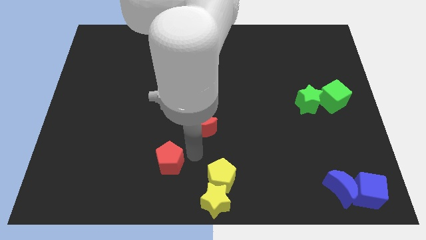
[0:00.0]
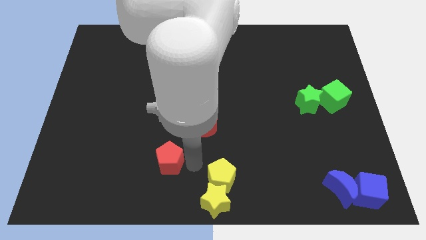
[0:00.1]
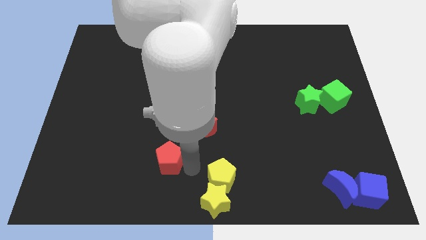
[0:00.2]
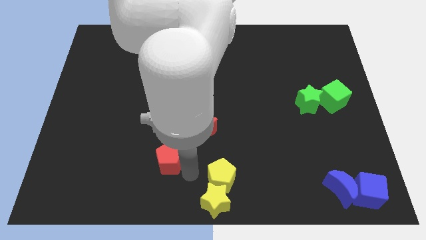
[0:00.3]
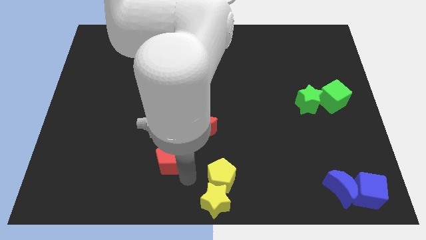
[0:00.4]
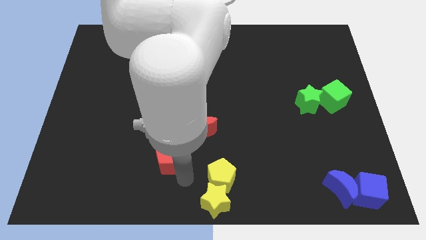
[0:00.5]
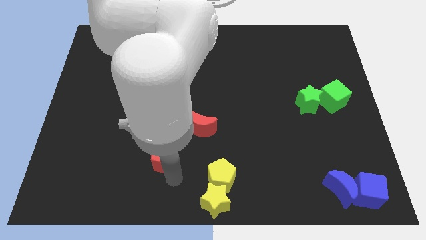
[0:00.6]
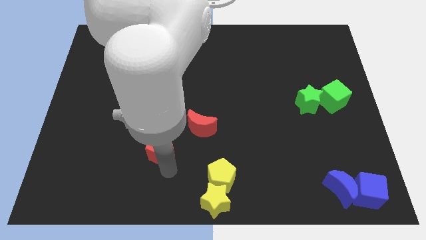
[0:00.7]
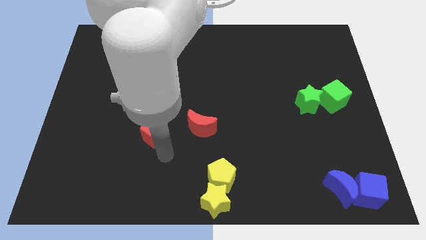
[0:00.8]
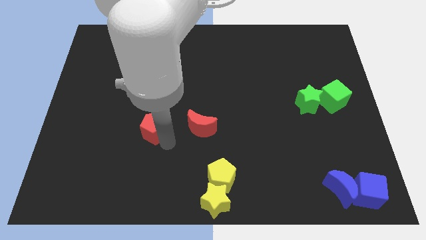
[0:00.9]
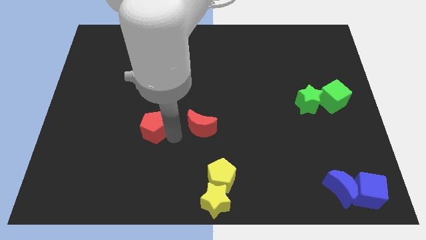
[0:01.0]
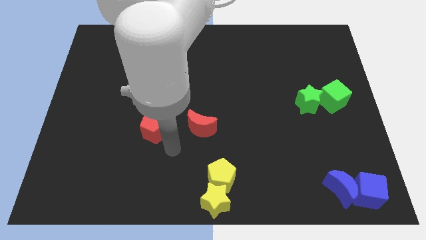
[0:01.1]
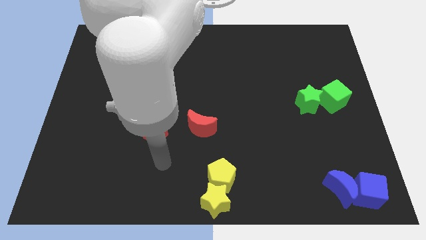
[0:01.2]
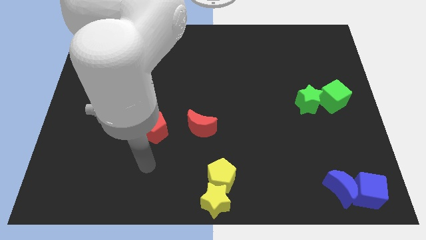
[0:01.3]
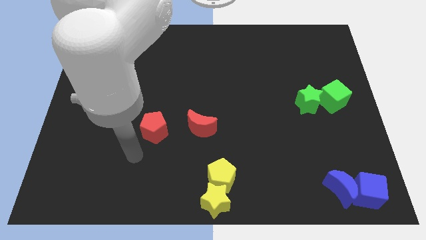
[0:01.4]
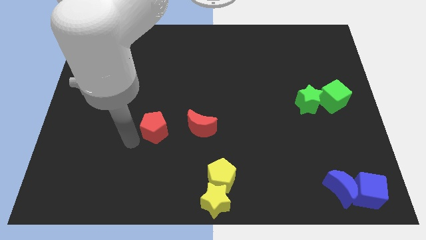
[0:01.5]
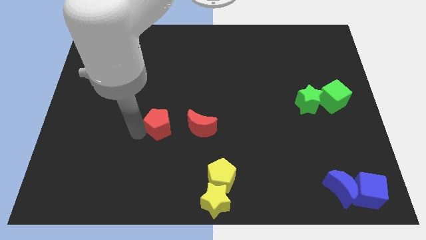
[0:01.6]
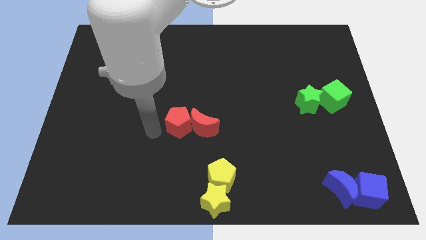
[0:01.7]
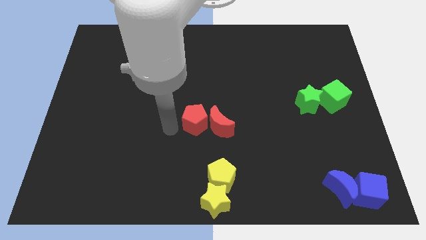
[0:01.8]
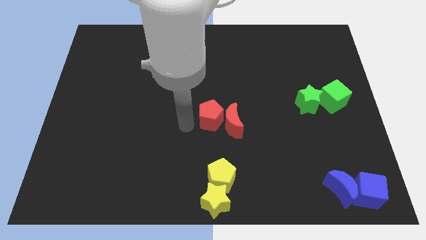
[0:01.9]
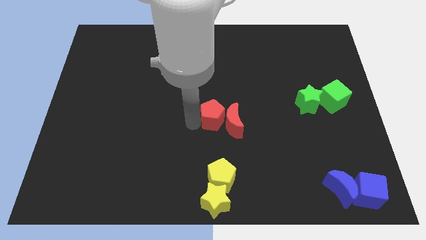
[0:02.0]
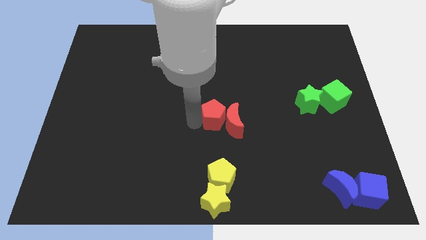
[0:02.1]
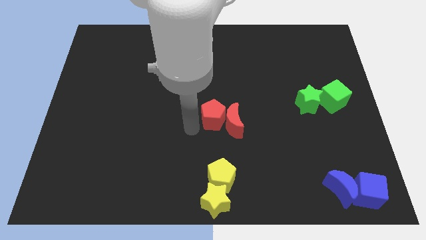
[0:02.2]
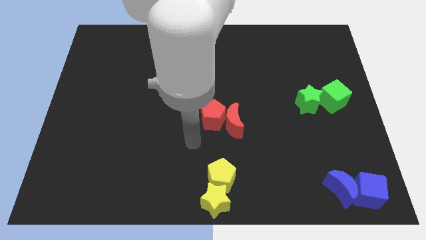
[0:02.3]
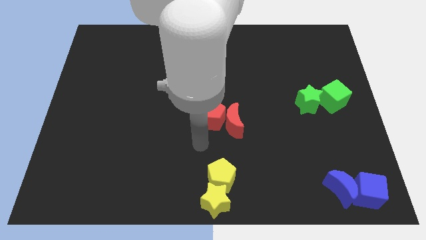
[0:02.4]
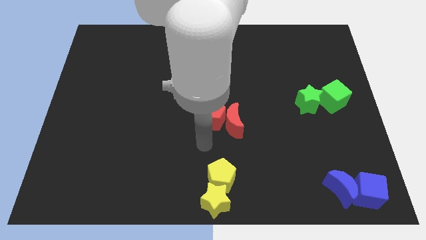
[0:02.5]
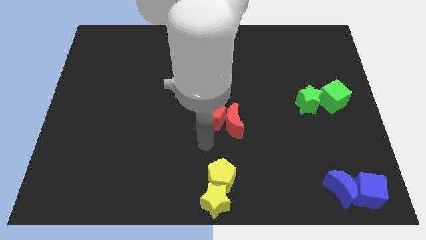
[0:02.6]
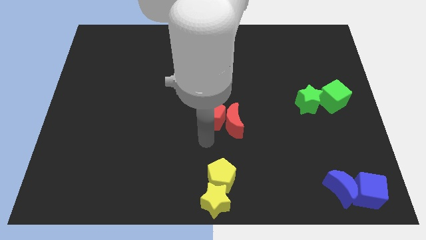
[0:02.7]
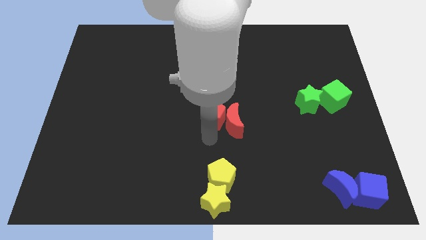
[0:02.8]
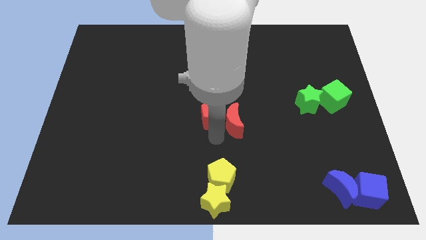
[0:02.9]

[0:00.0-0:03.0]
push the red pentagon into the red moon

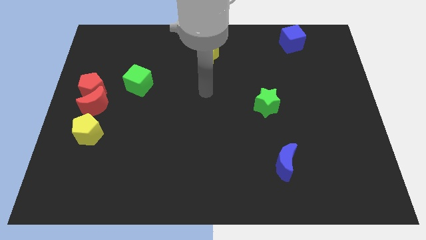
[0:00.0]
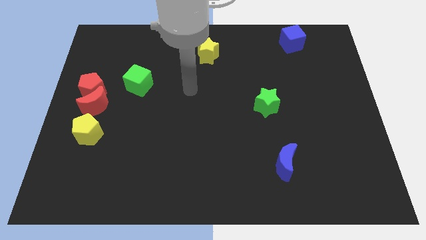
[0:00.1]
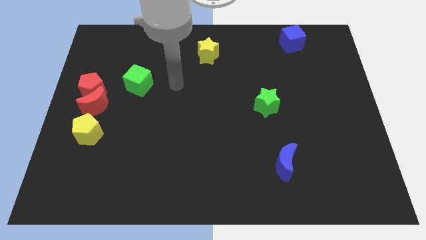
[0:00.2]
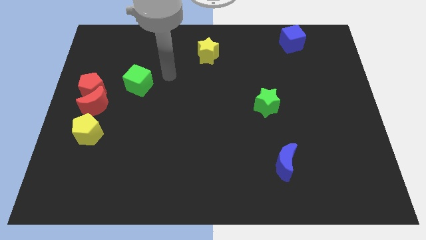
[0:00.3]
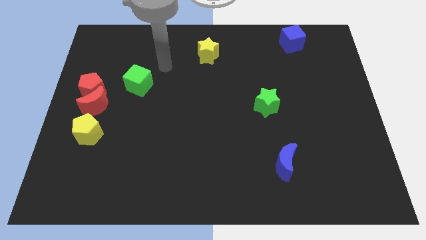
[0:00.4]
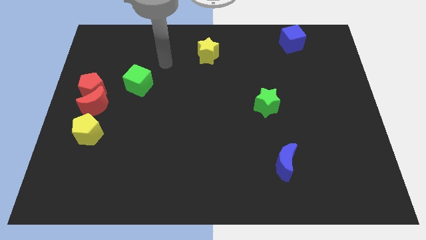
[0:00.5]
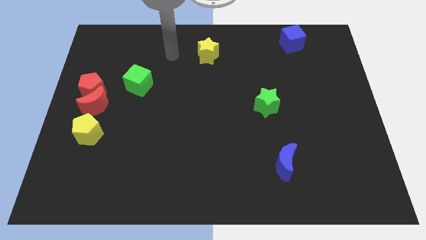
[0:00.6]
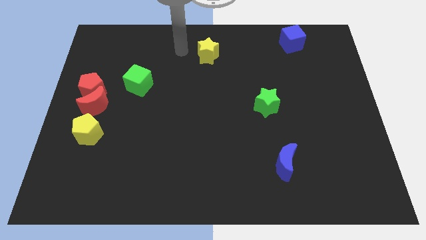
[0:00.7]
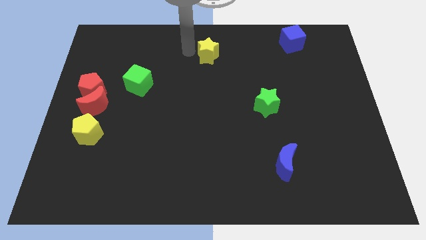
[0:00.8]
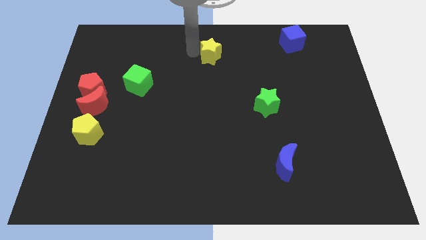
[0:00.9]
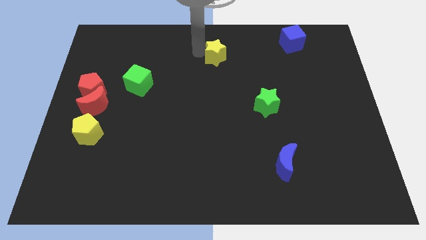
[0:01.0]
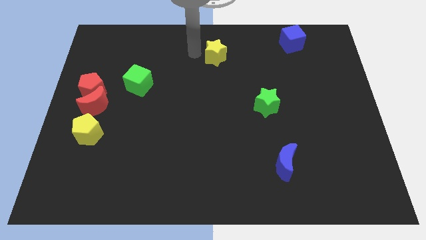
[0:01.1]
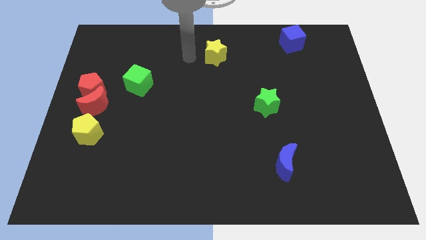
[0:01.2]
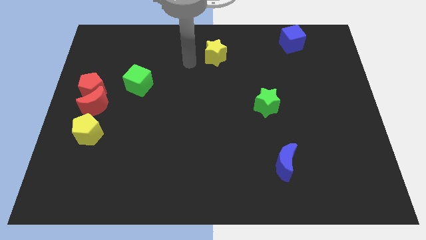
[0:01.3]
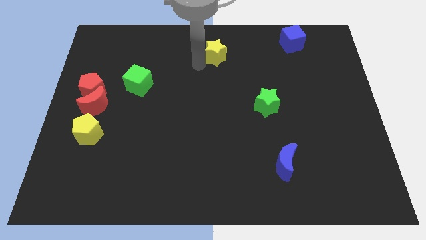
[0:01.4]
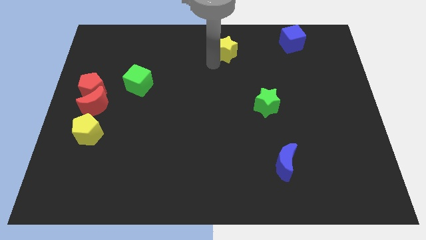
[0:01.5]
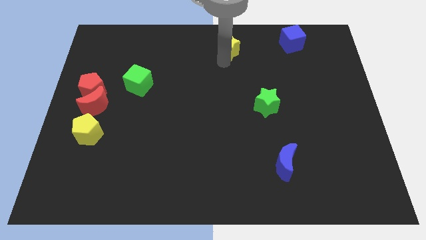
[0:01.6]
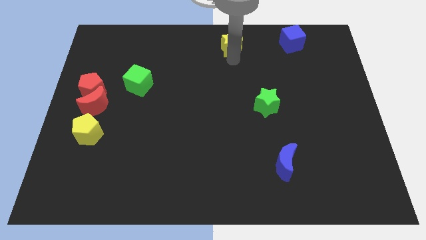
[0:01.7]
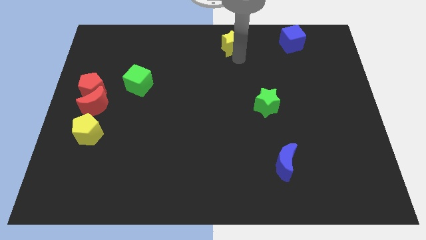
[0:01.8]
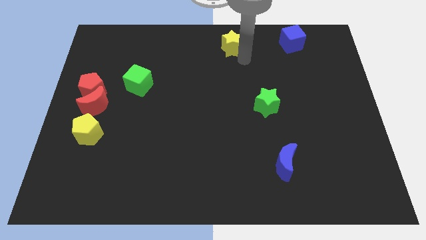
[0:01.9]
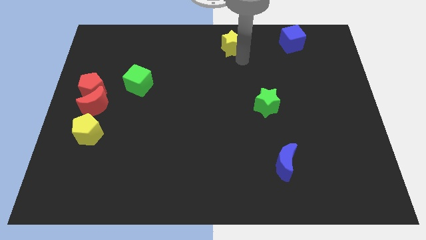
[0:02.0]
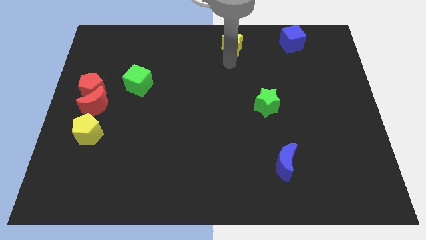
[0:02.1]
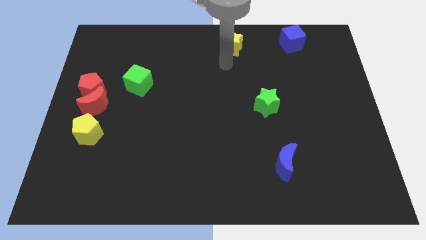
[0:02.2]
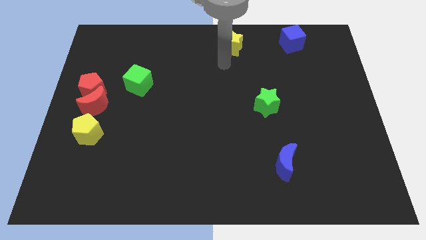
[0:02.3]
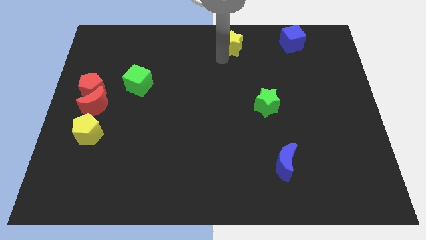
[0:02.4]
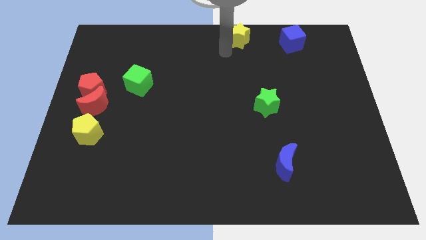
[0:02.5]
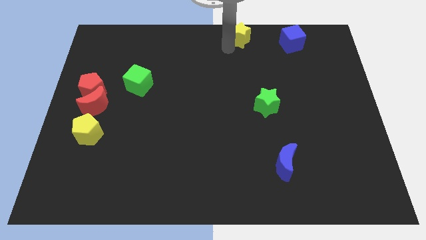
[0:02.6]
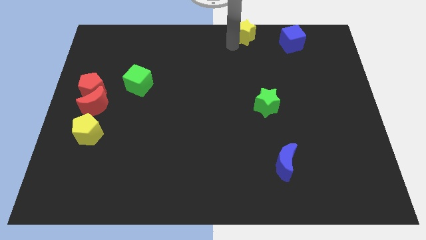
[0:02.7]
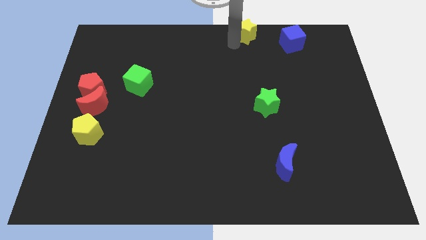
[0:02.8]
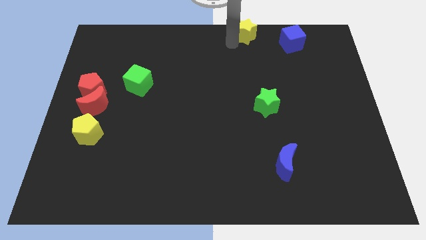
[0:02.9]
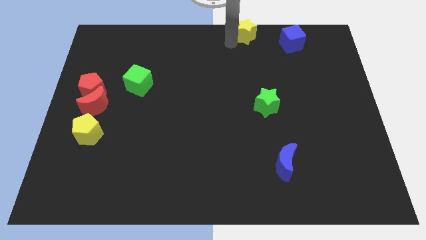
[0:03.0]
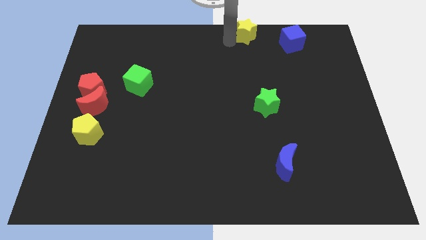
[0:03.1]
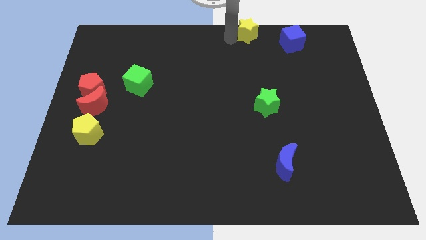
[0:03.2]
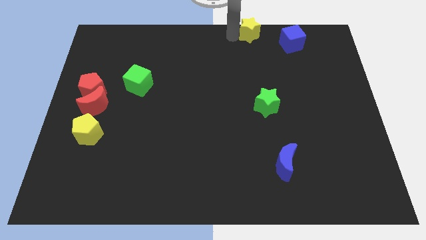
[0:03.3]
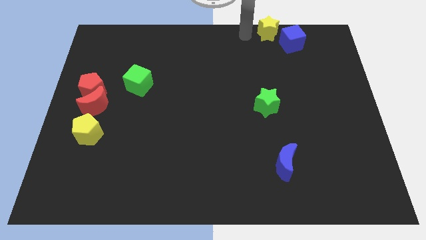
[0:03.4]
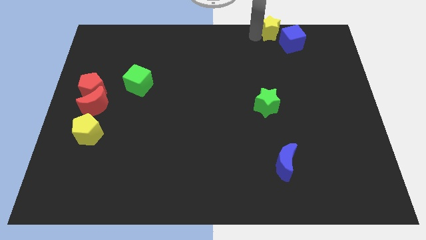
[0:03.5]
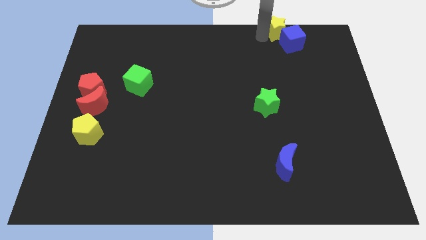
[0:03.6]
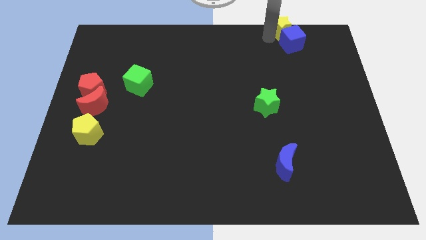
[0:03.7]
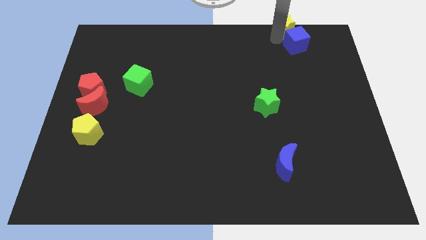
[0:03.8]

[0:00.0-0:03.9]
place the yellow star on top of the blue cube

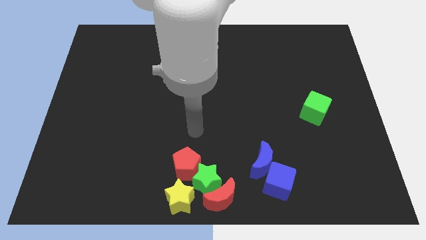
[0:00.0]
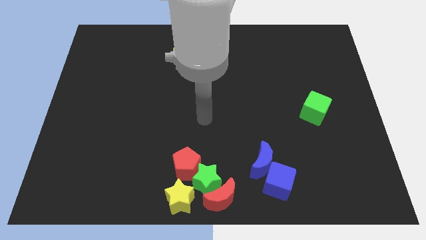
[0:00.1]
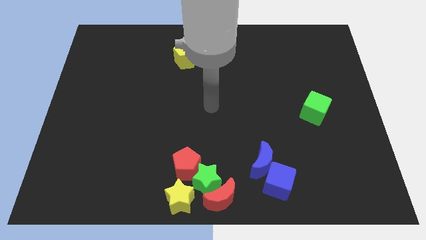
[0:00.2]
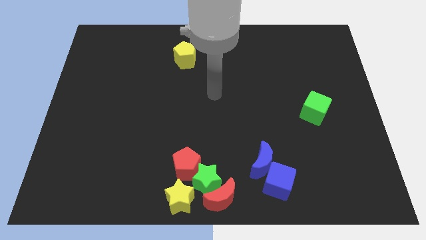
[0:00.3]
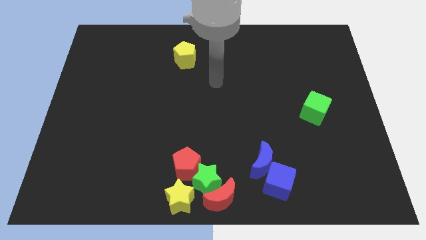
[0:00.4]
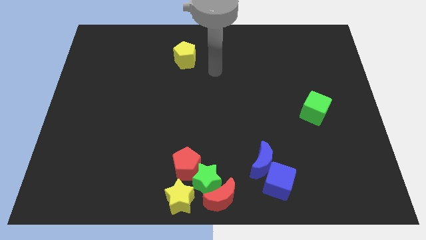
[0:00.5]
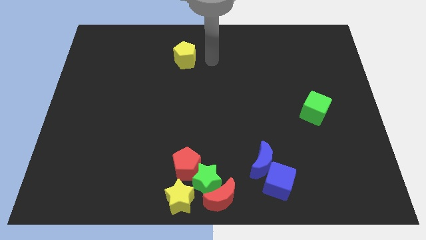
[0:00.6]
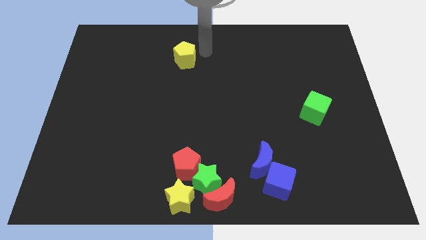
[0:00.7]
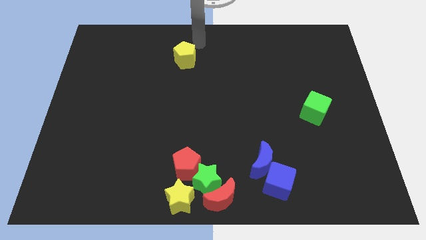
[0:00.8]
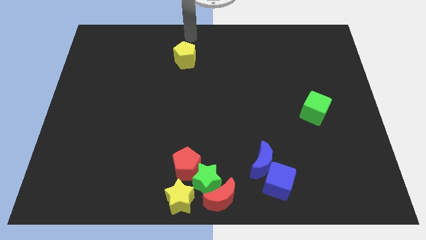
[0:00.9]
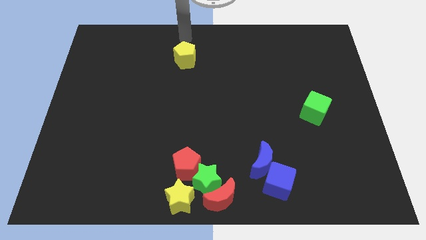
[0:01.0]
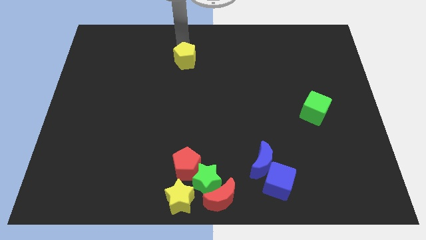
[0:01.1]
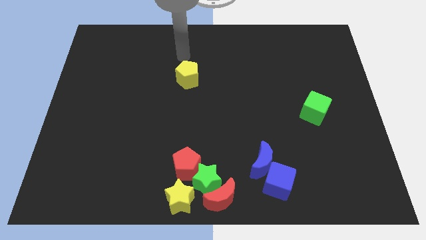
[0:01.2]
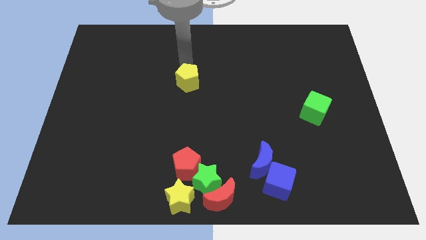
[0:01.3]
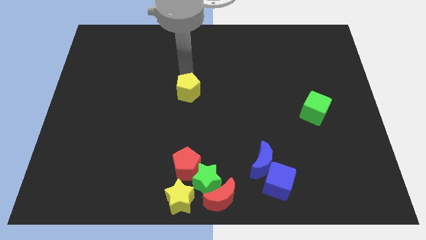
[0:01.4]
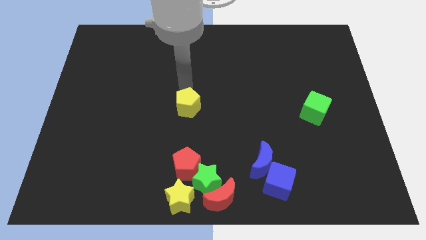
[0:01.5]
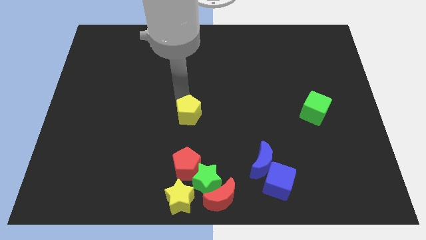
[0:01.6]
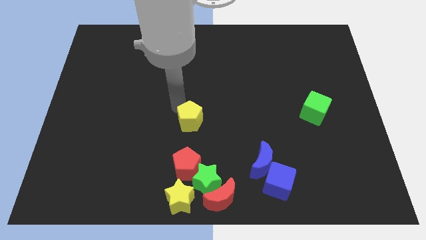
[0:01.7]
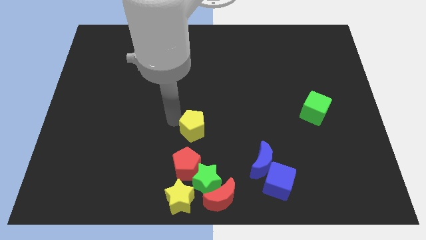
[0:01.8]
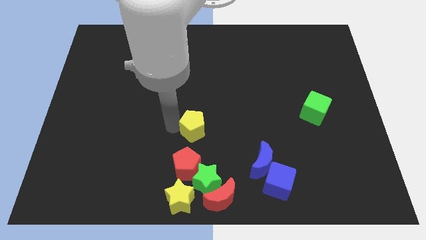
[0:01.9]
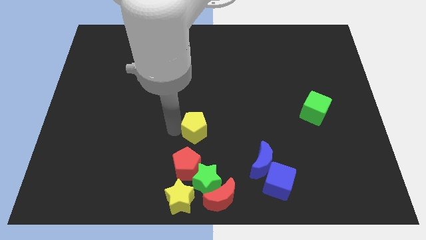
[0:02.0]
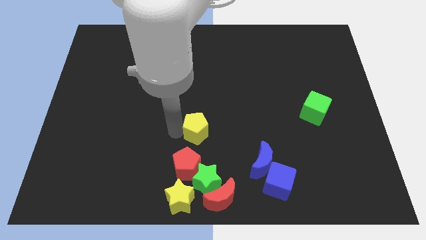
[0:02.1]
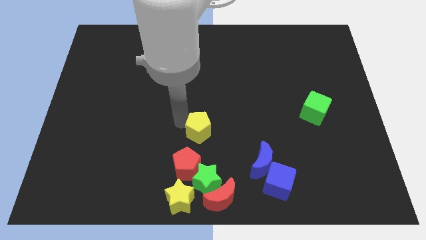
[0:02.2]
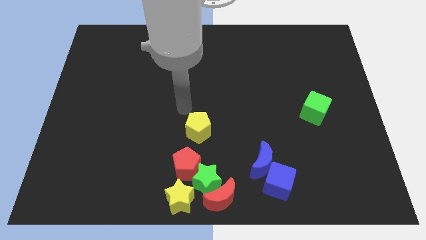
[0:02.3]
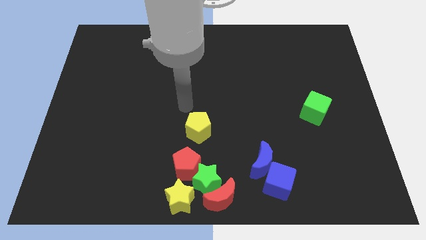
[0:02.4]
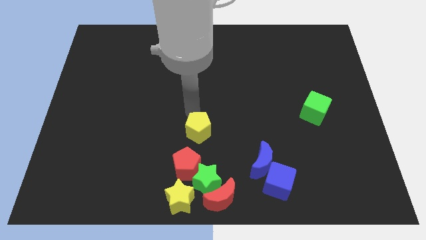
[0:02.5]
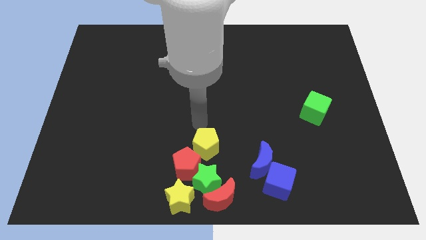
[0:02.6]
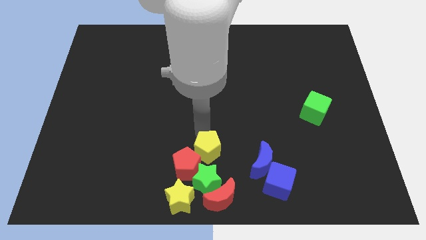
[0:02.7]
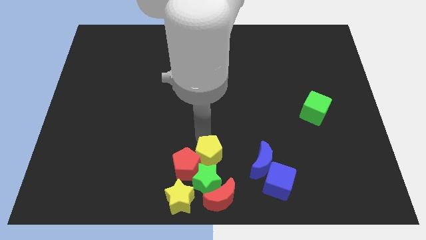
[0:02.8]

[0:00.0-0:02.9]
move the yellow pentagon diagonally top right to the red pentagon
